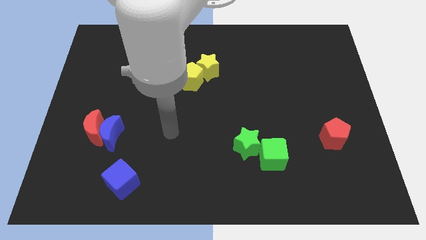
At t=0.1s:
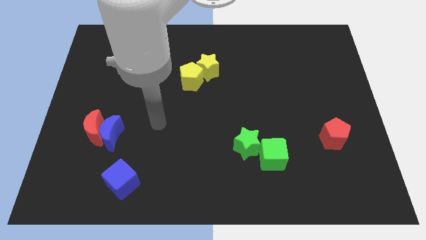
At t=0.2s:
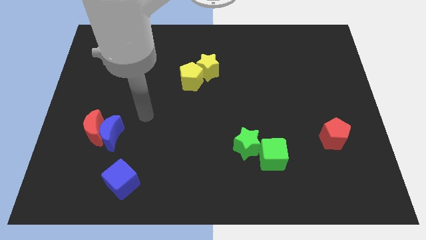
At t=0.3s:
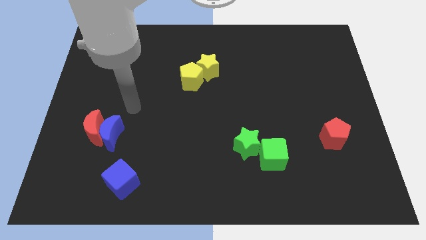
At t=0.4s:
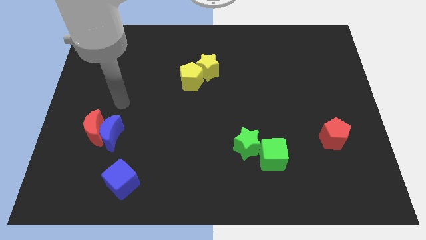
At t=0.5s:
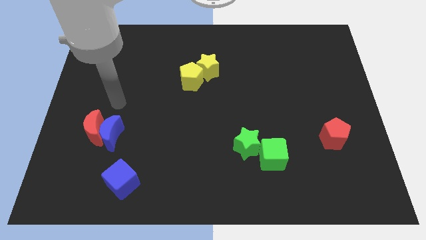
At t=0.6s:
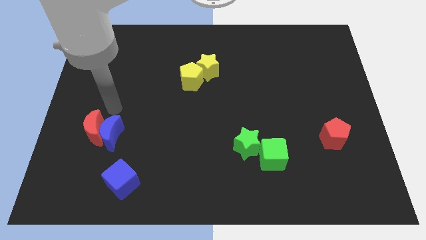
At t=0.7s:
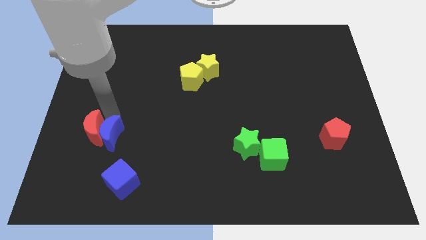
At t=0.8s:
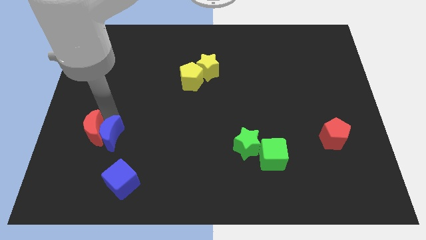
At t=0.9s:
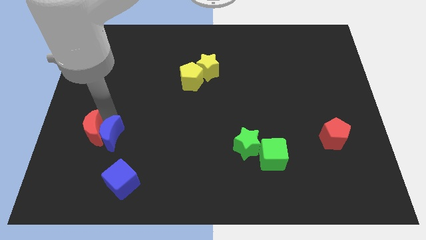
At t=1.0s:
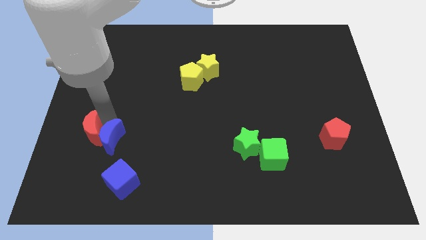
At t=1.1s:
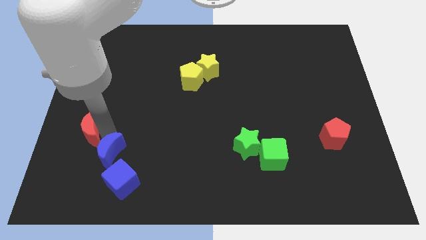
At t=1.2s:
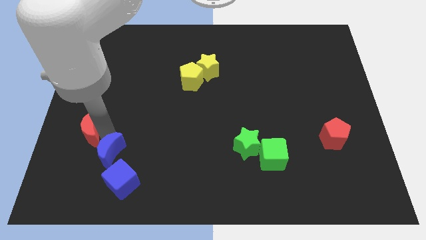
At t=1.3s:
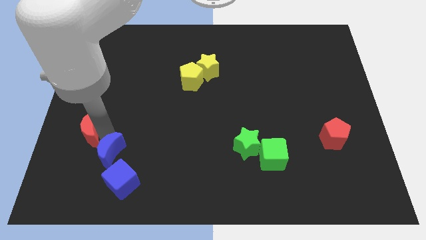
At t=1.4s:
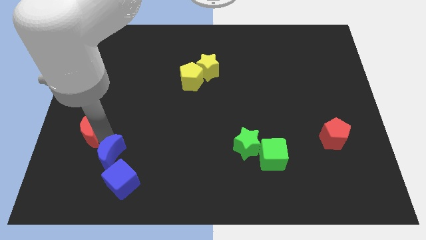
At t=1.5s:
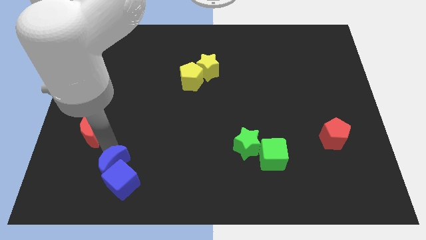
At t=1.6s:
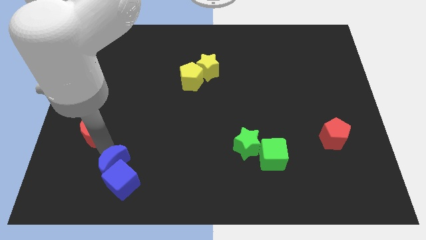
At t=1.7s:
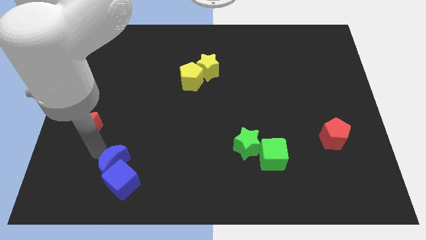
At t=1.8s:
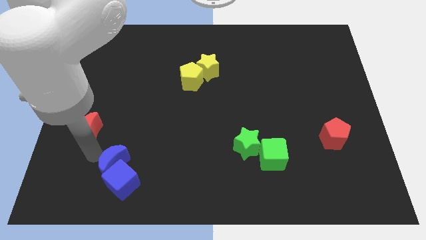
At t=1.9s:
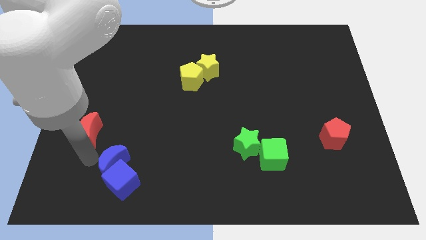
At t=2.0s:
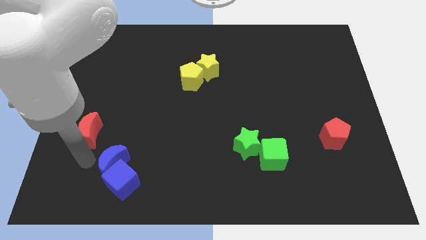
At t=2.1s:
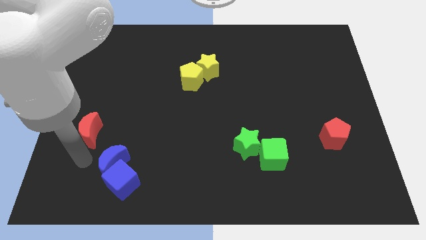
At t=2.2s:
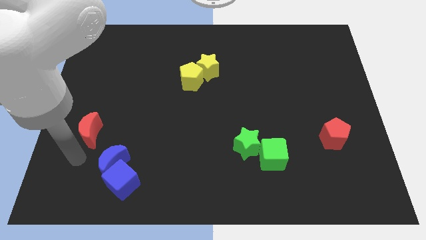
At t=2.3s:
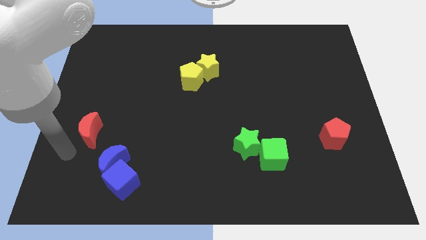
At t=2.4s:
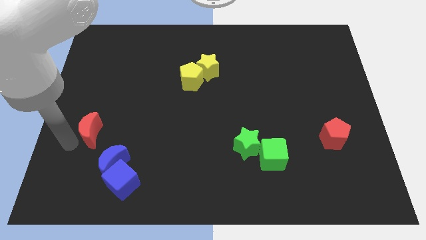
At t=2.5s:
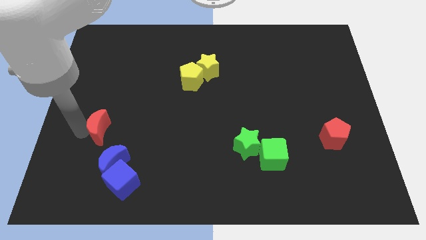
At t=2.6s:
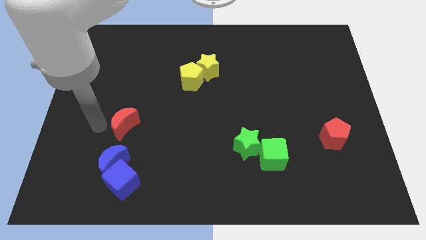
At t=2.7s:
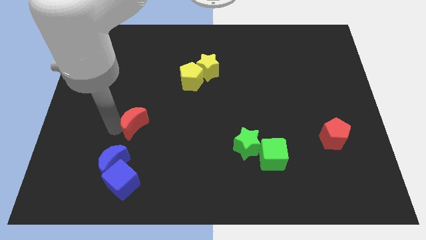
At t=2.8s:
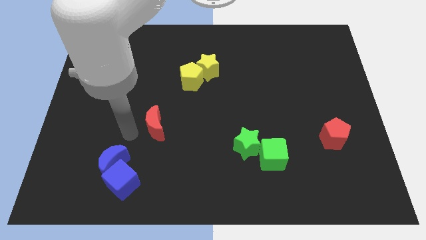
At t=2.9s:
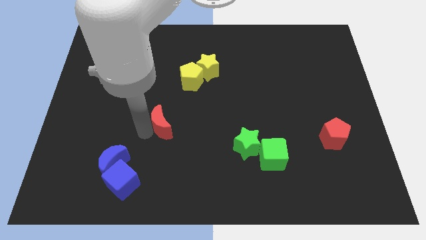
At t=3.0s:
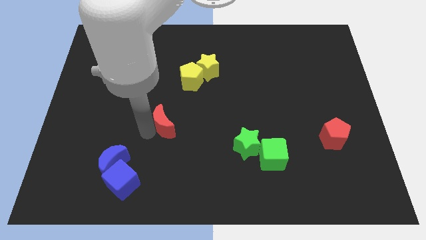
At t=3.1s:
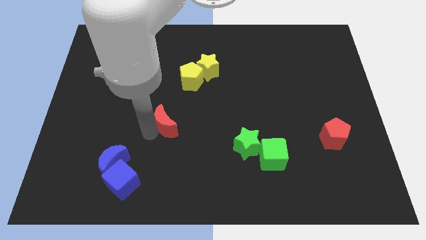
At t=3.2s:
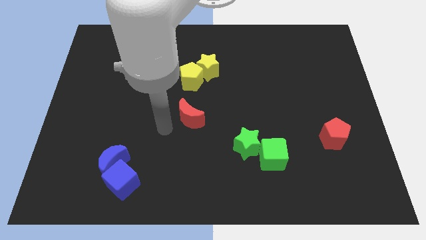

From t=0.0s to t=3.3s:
push the red crescent away from the blue crescent

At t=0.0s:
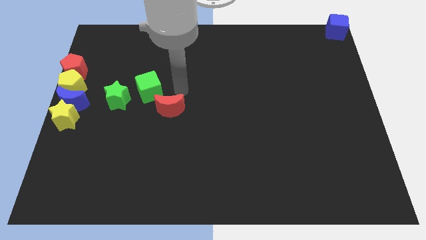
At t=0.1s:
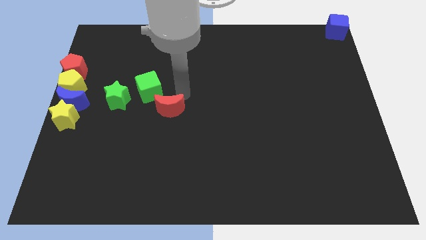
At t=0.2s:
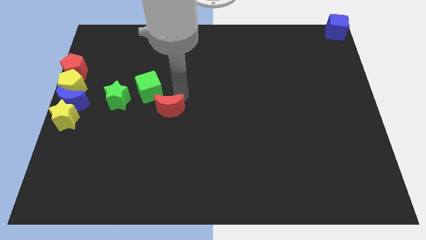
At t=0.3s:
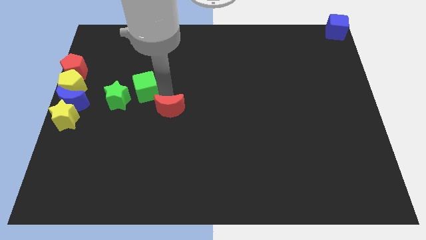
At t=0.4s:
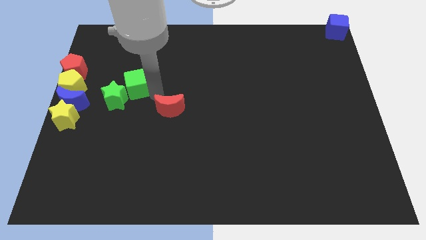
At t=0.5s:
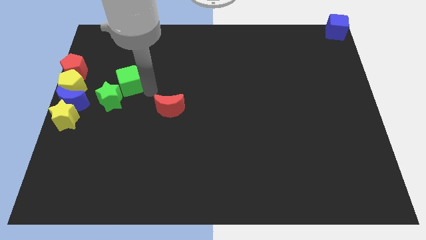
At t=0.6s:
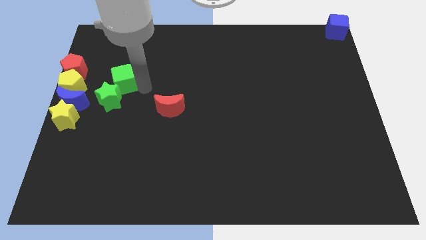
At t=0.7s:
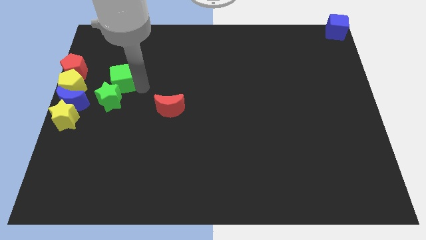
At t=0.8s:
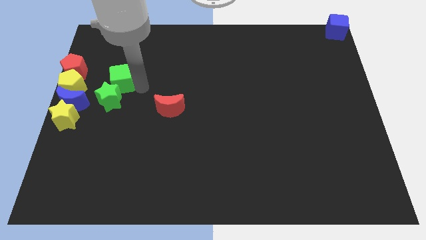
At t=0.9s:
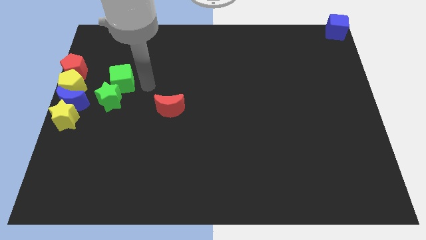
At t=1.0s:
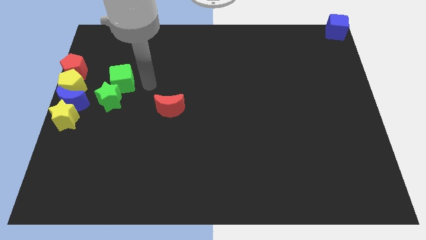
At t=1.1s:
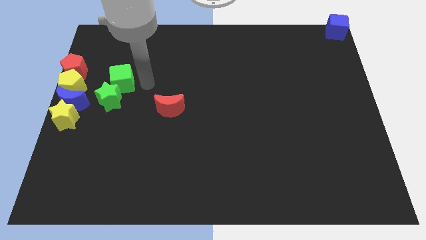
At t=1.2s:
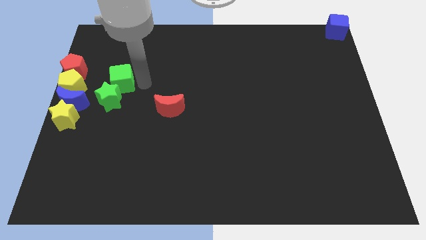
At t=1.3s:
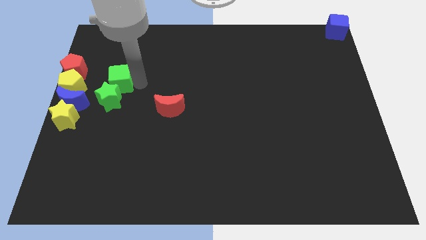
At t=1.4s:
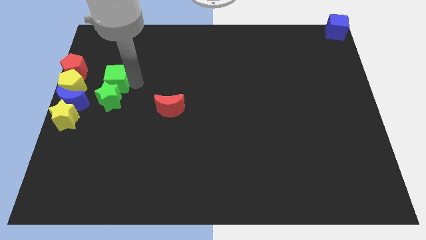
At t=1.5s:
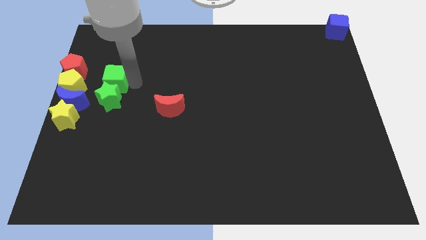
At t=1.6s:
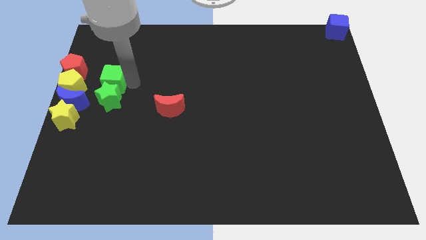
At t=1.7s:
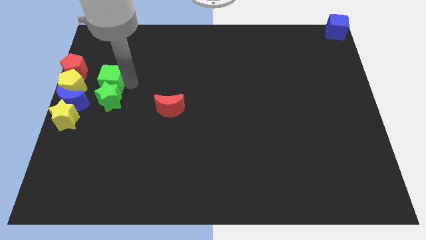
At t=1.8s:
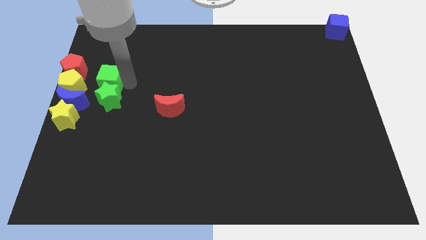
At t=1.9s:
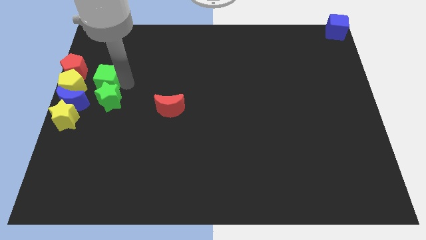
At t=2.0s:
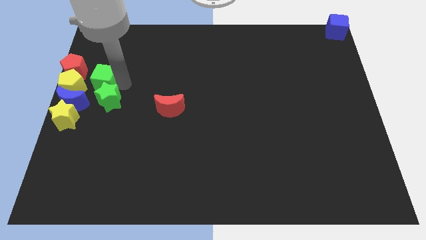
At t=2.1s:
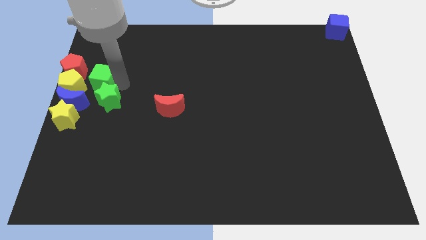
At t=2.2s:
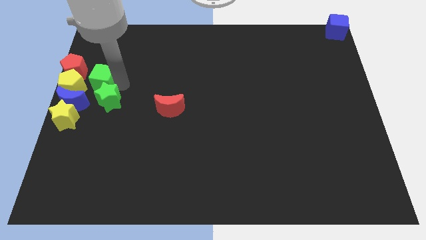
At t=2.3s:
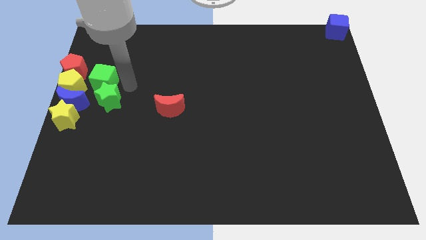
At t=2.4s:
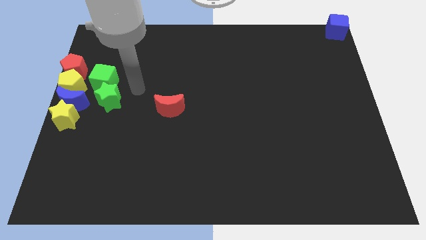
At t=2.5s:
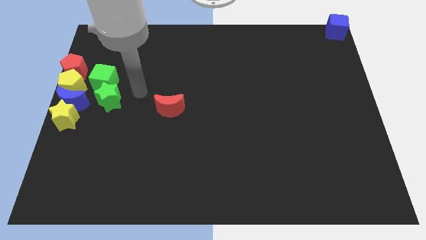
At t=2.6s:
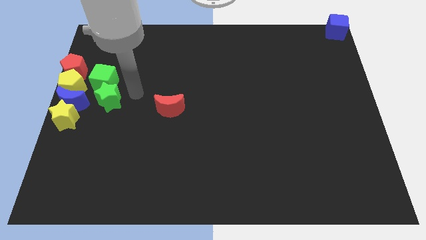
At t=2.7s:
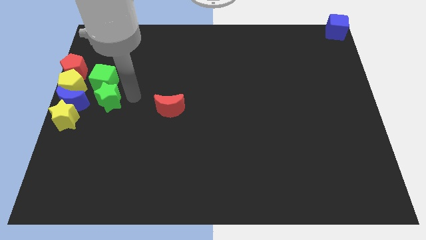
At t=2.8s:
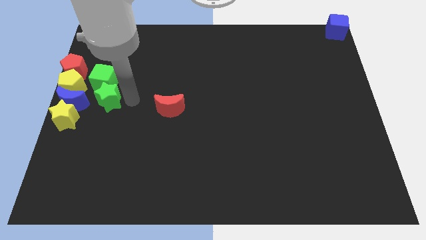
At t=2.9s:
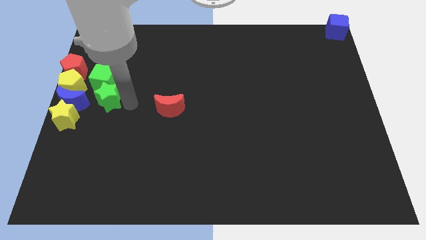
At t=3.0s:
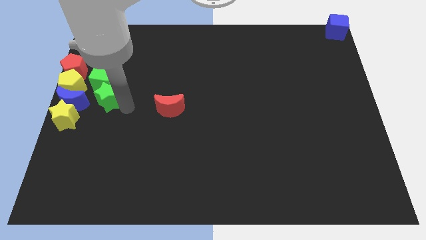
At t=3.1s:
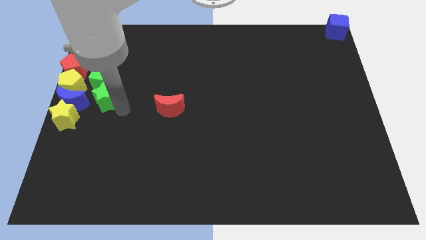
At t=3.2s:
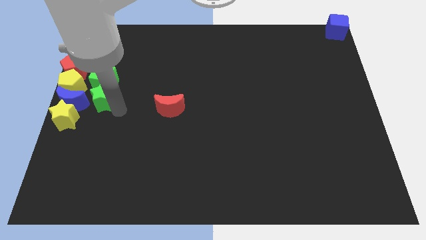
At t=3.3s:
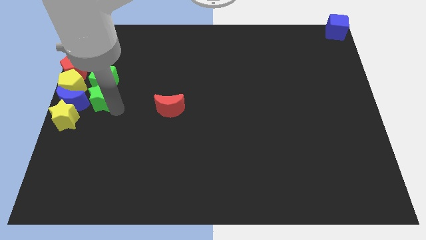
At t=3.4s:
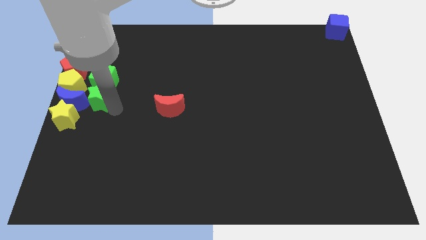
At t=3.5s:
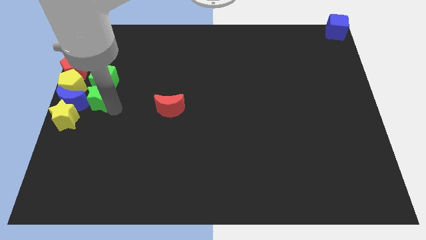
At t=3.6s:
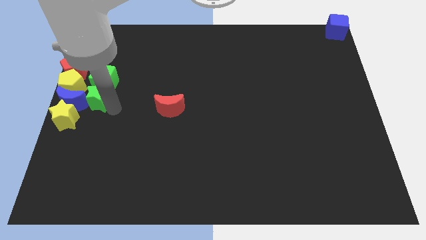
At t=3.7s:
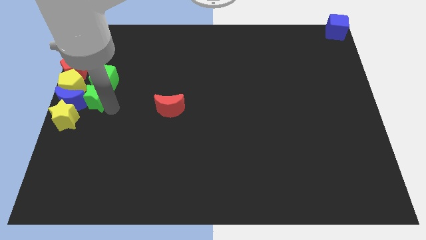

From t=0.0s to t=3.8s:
adjust the green blocks on the right side of the blocks

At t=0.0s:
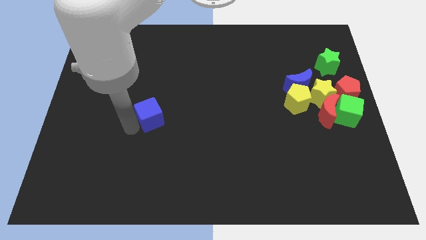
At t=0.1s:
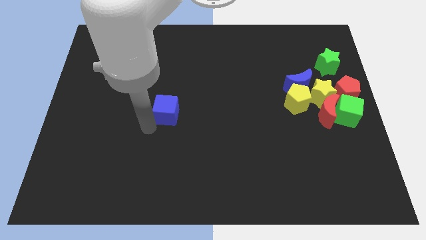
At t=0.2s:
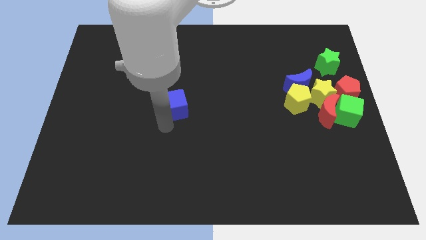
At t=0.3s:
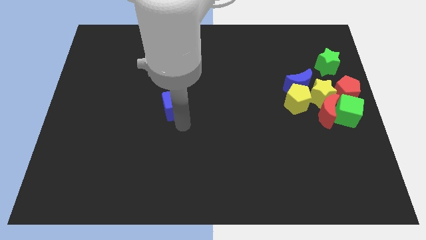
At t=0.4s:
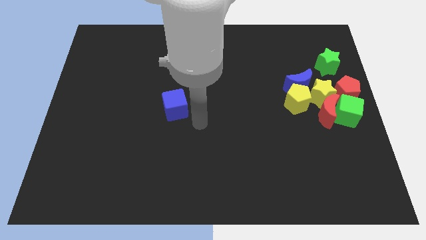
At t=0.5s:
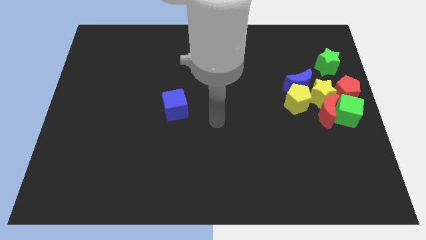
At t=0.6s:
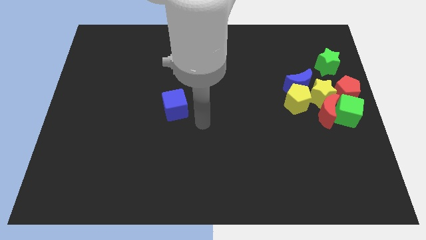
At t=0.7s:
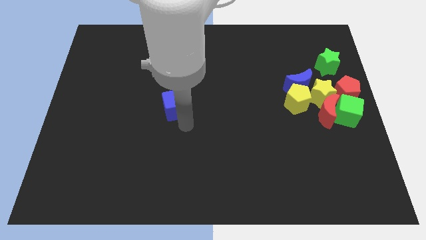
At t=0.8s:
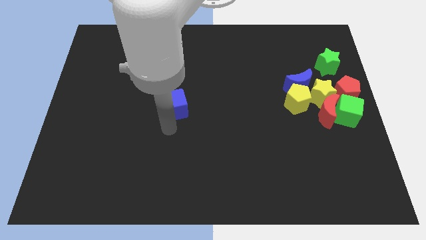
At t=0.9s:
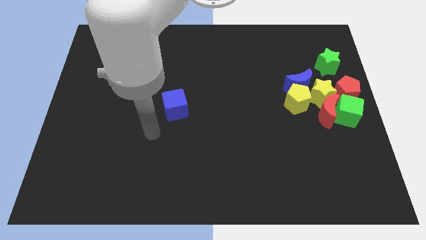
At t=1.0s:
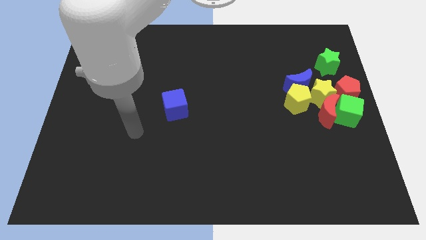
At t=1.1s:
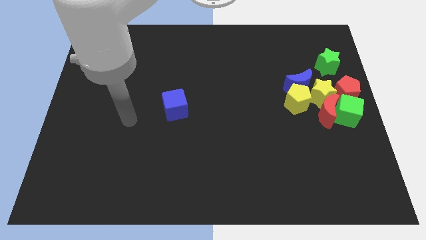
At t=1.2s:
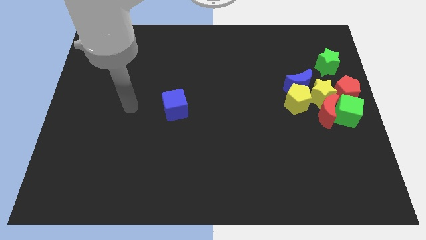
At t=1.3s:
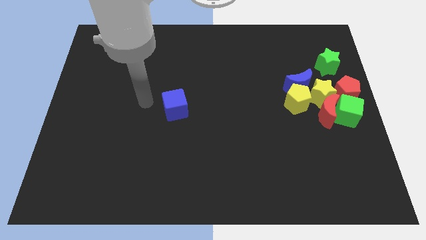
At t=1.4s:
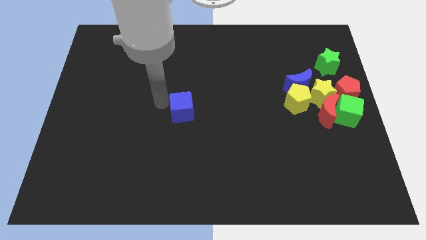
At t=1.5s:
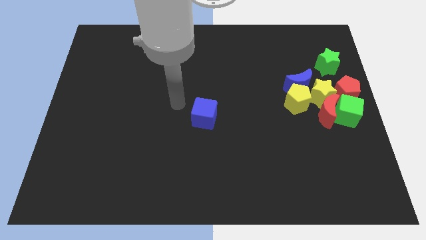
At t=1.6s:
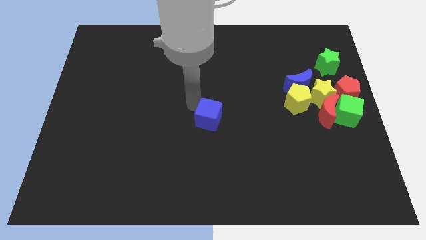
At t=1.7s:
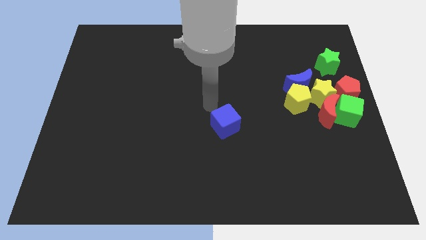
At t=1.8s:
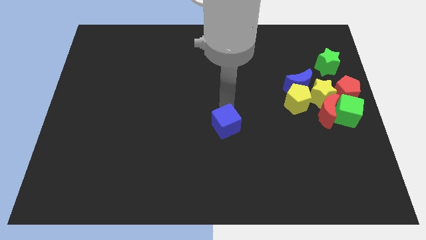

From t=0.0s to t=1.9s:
move the blue cube slightly in the center of the board

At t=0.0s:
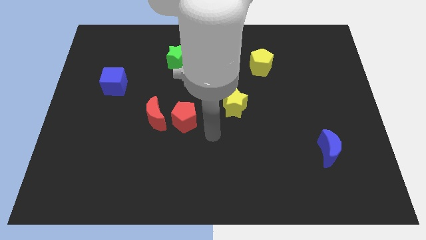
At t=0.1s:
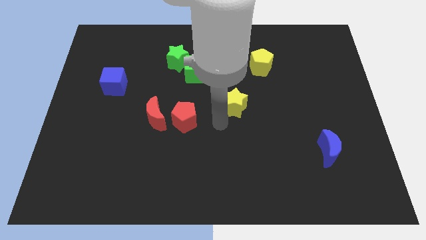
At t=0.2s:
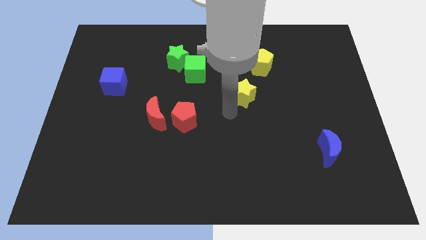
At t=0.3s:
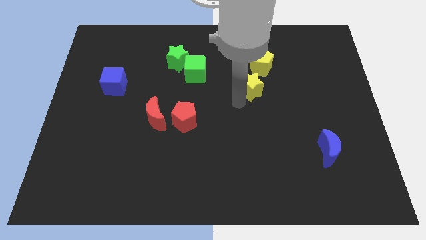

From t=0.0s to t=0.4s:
push the yellow star towards the yellow pentagon
